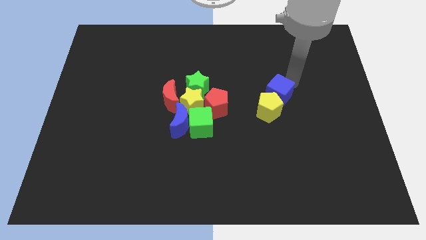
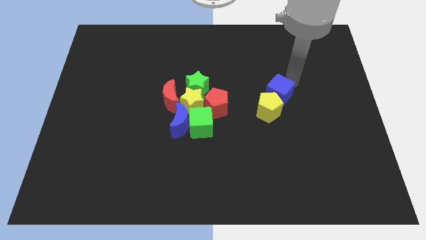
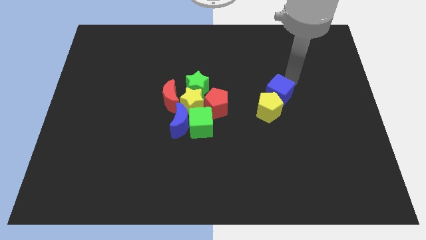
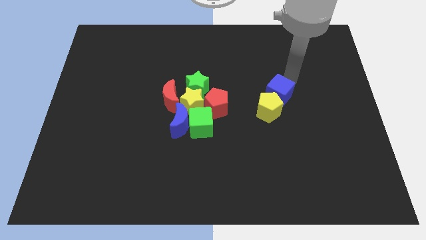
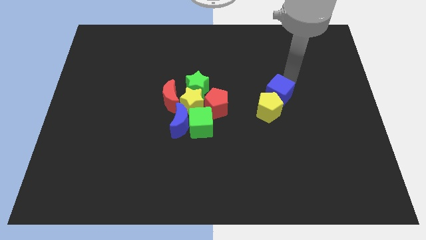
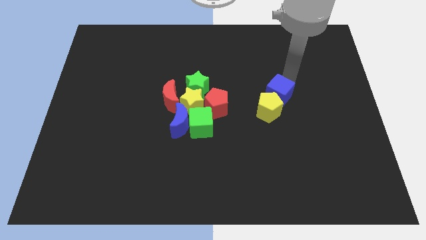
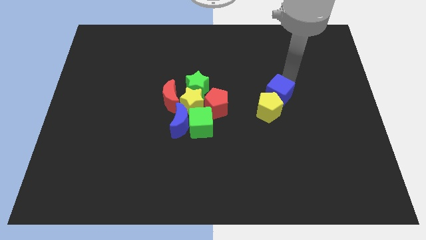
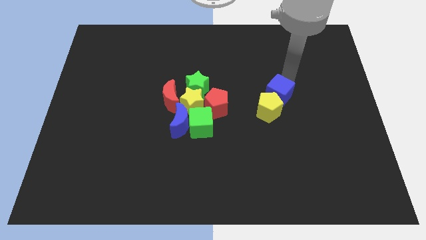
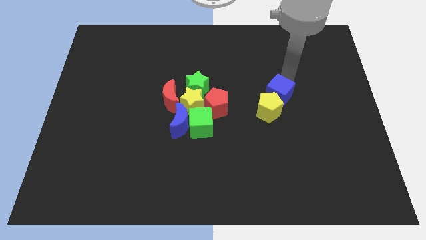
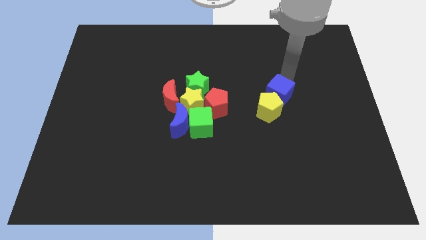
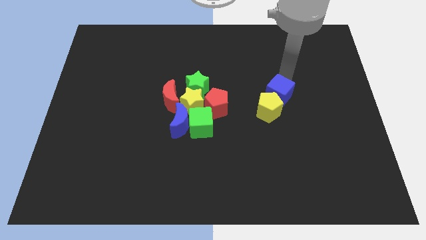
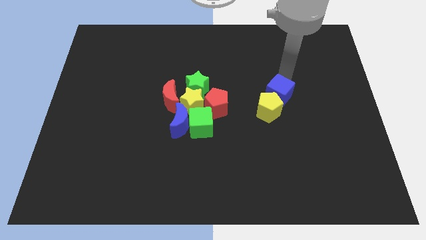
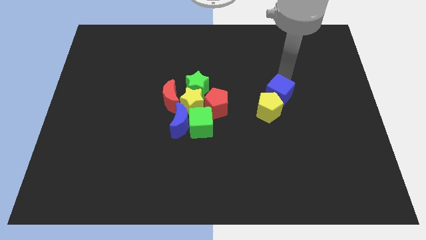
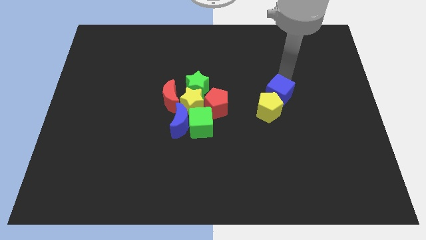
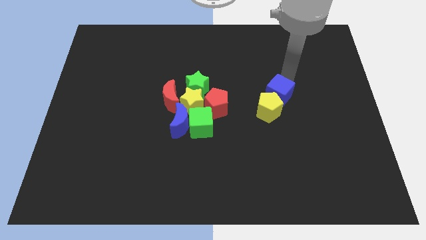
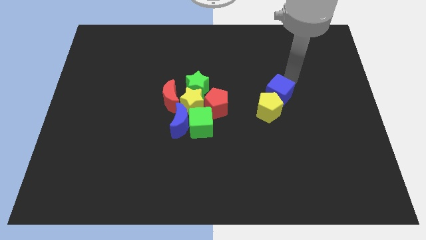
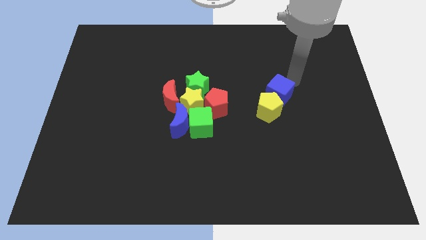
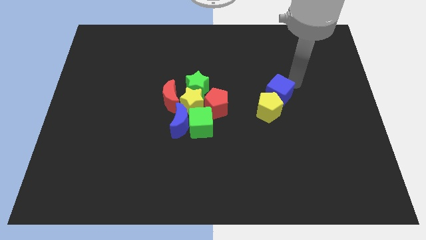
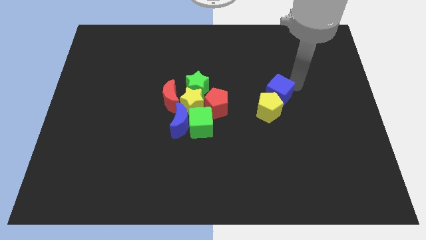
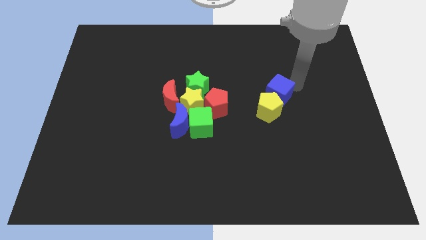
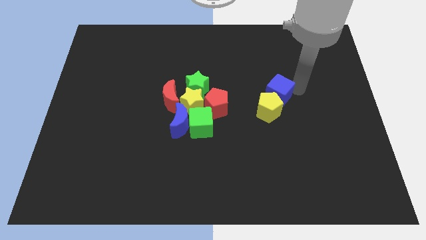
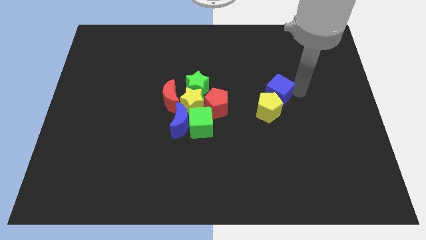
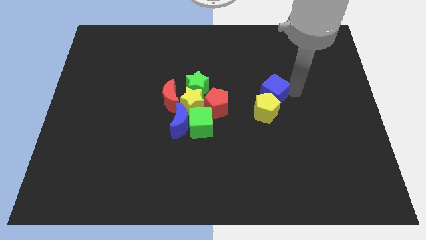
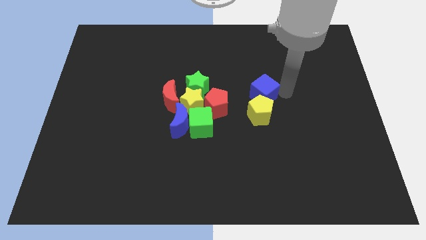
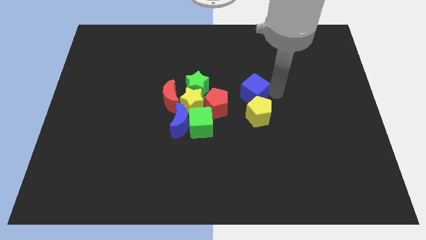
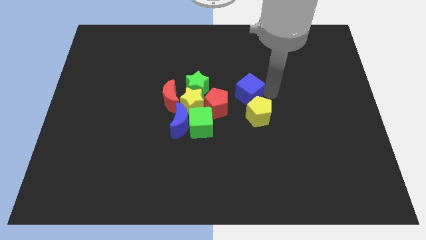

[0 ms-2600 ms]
push the blue cube and yellow pentagon towards the group of blocks

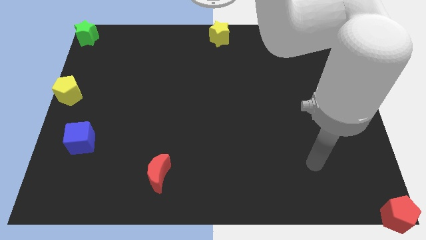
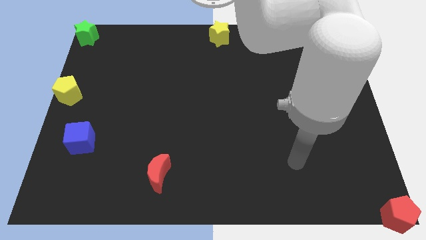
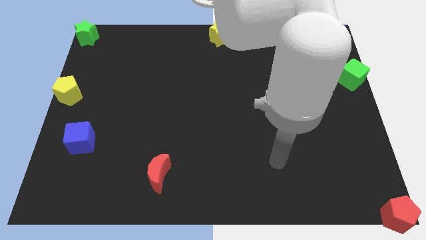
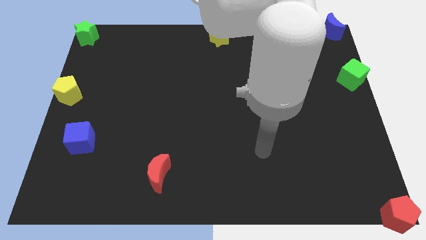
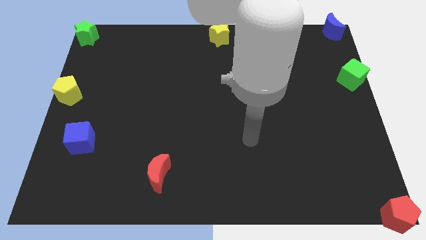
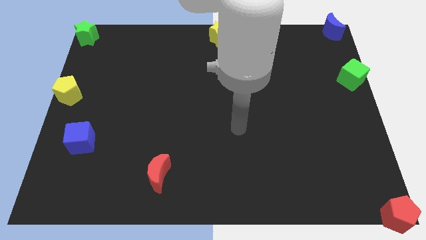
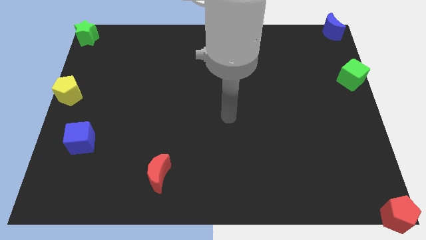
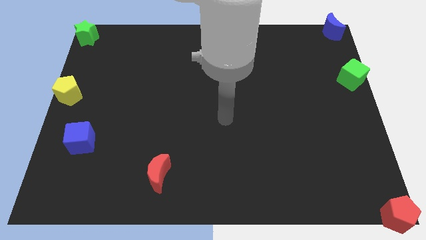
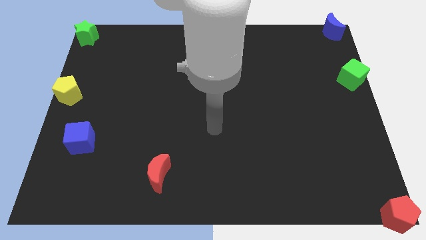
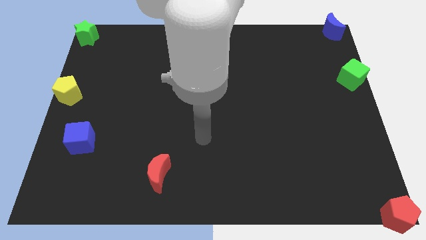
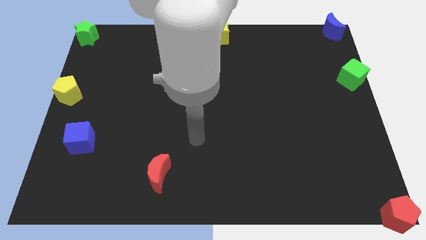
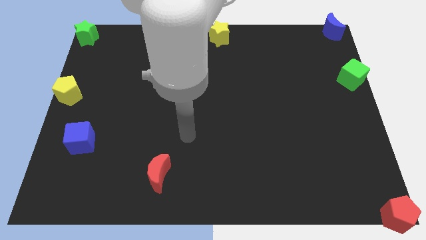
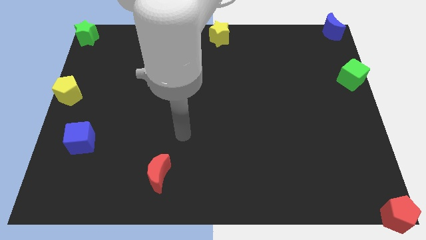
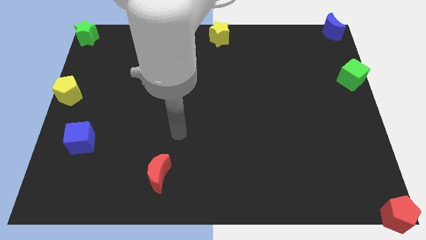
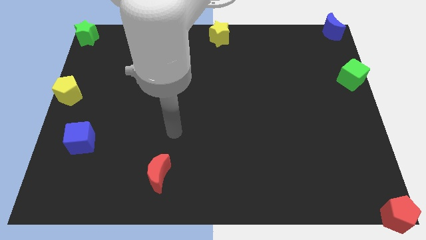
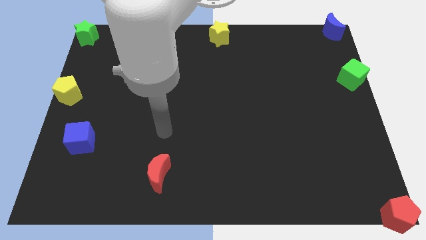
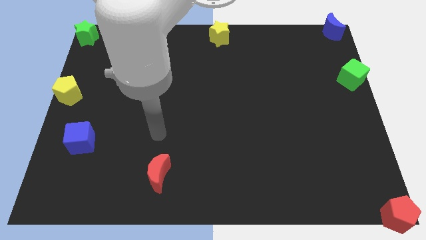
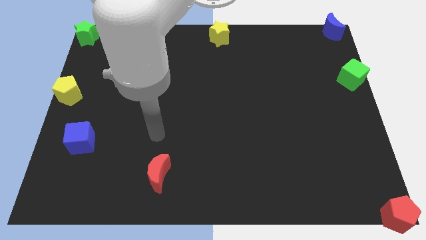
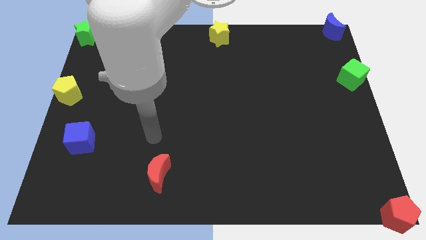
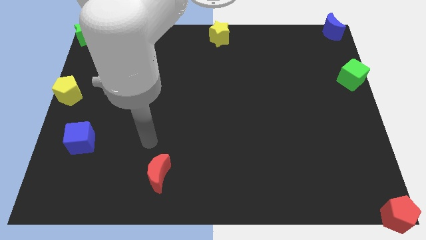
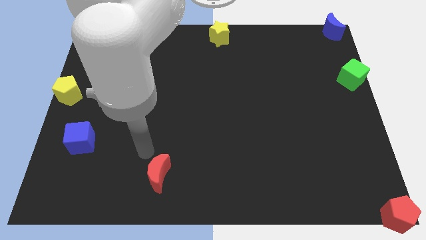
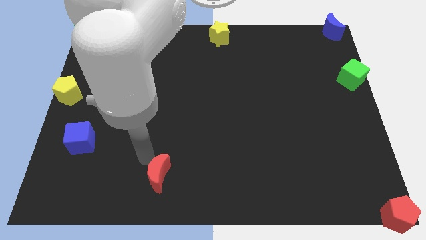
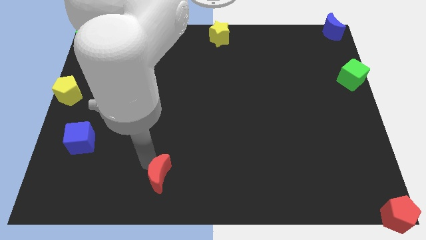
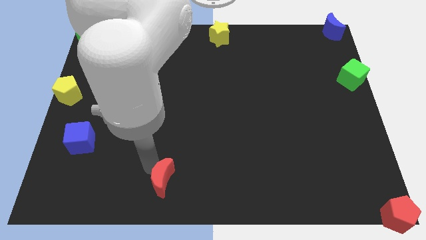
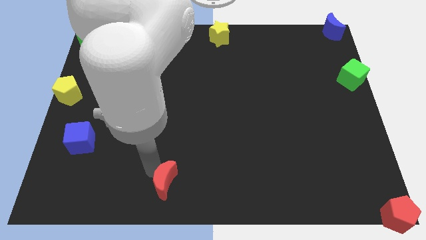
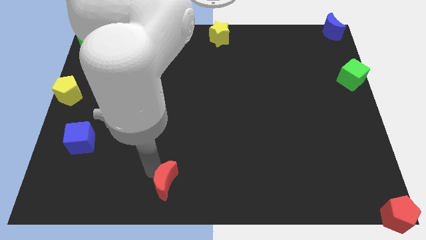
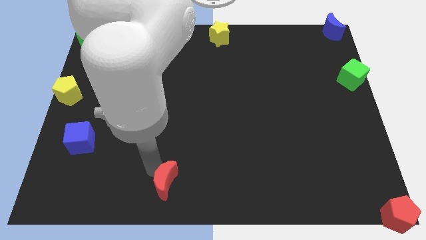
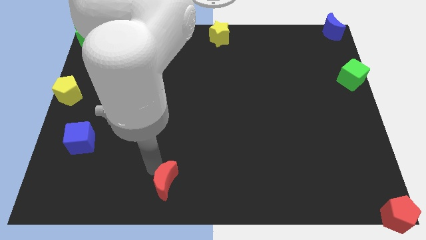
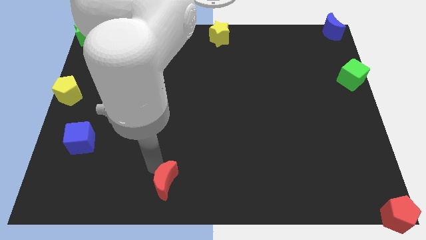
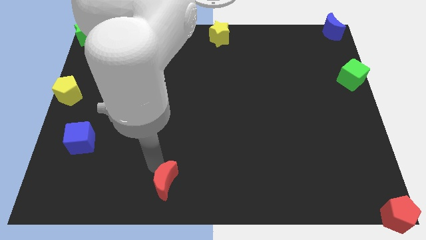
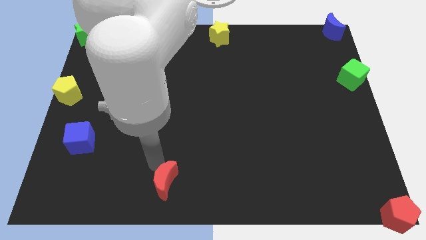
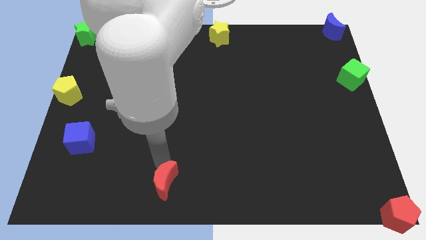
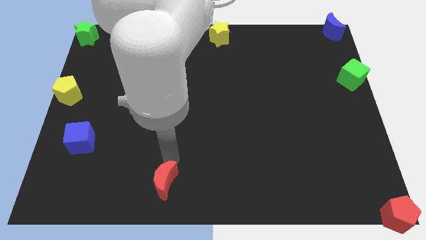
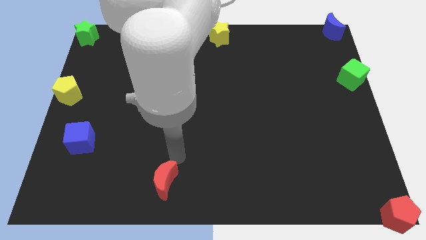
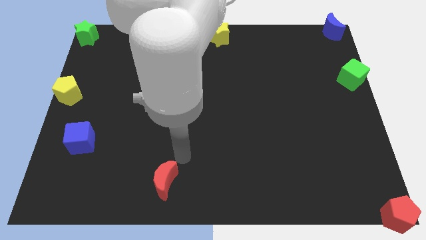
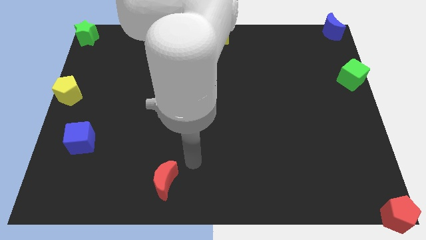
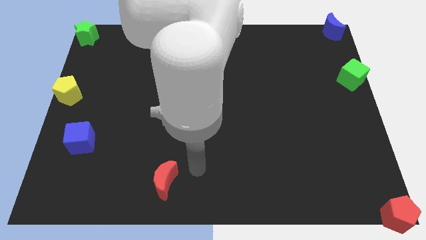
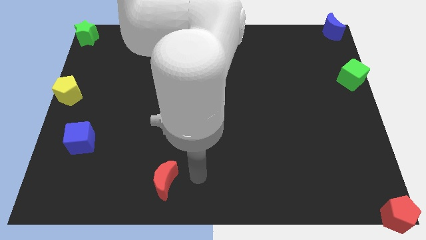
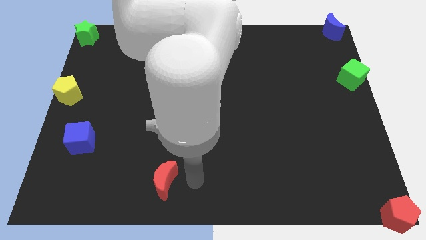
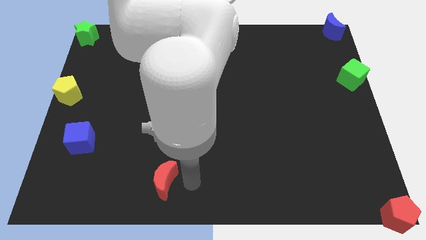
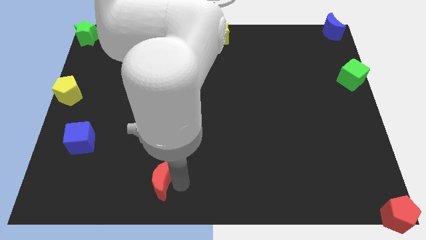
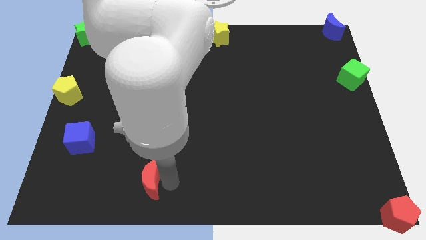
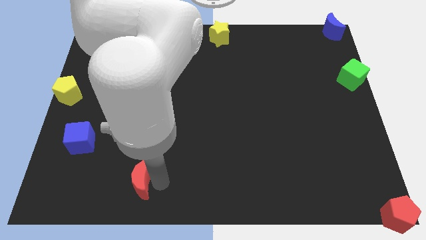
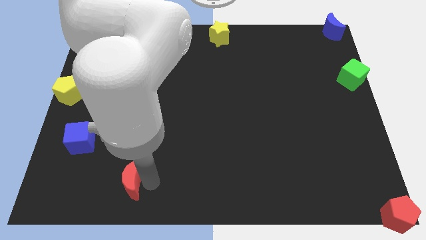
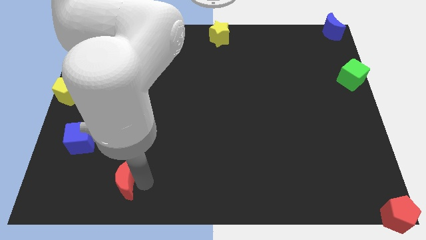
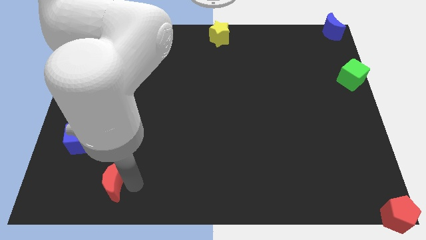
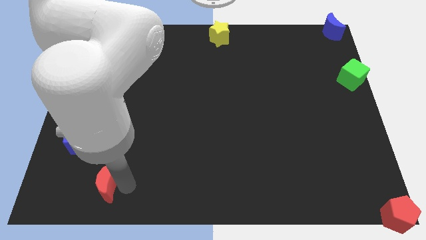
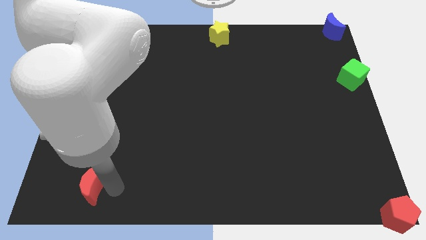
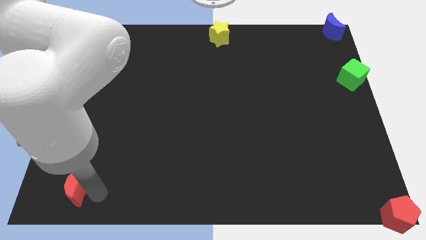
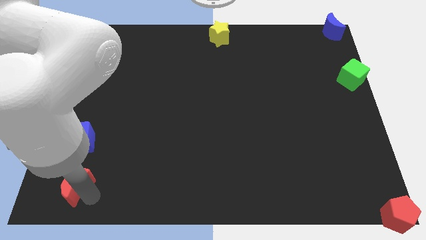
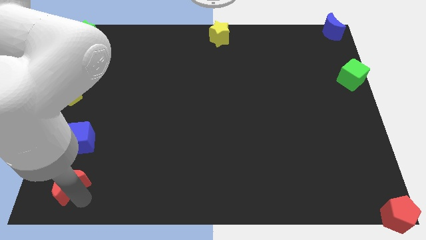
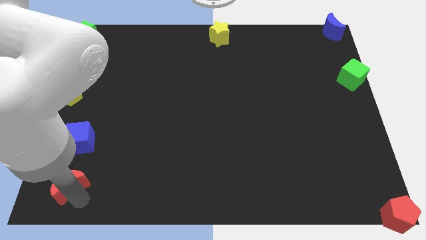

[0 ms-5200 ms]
drag the red moon below the blue cube

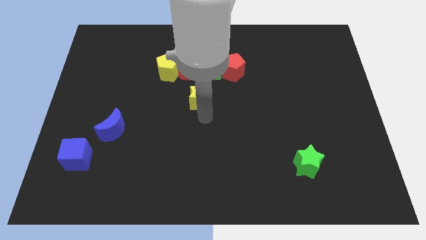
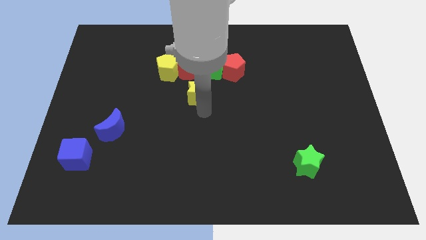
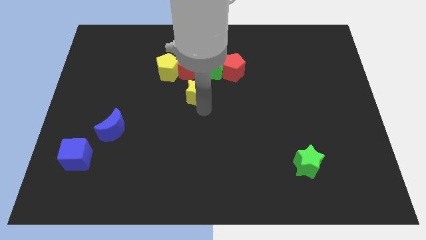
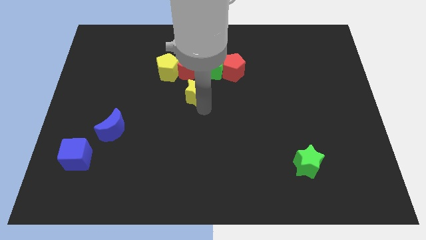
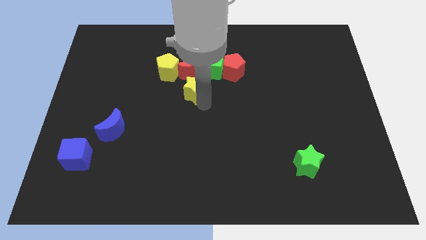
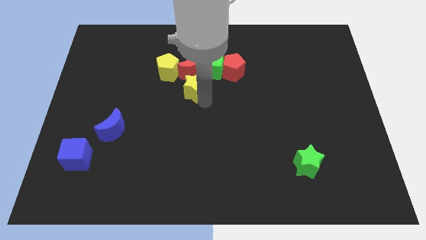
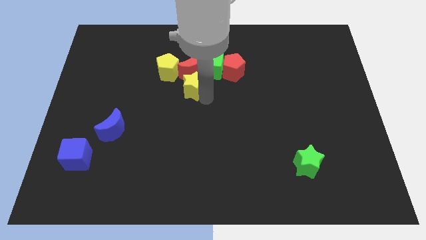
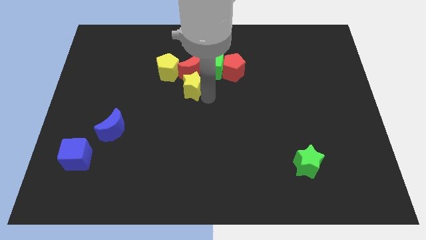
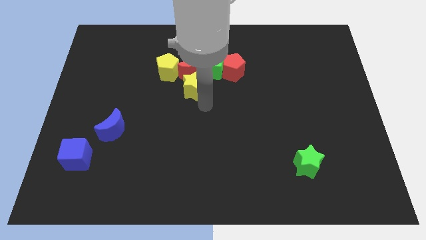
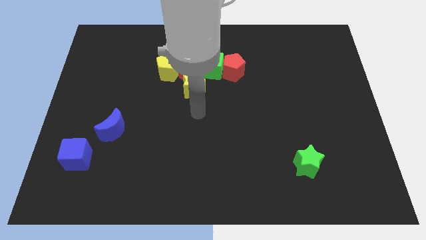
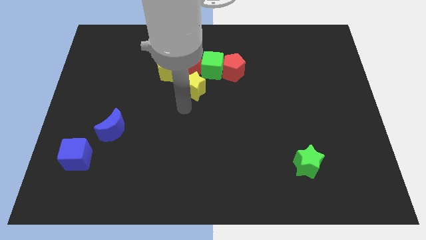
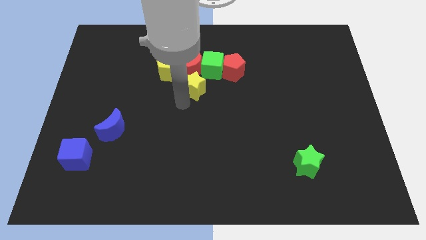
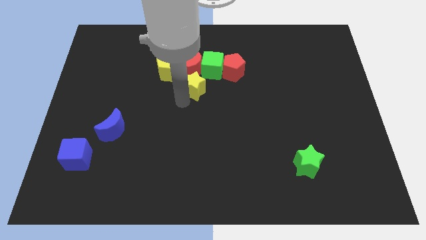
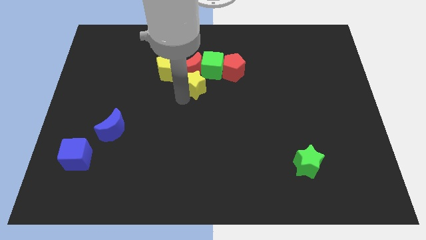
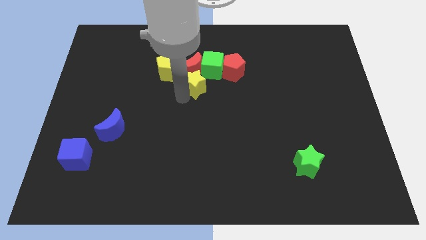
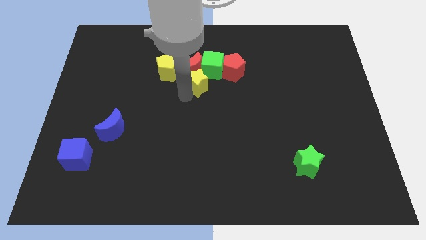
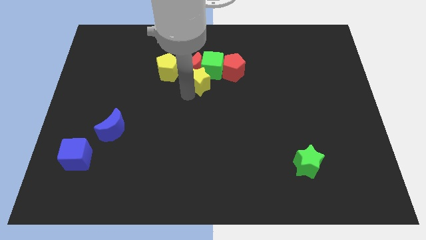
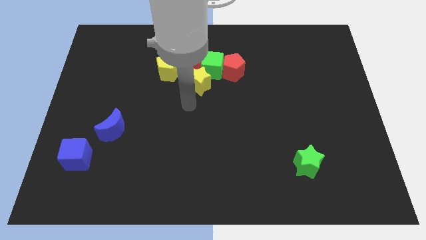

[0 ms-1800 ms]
place the yellow star below the red moon and green square
